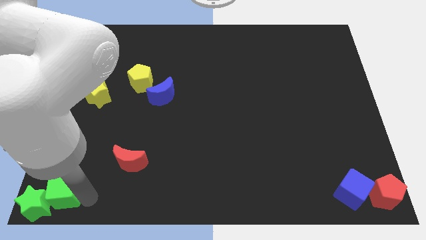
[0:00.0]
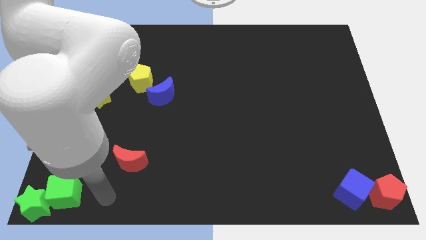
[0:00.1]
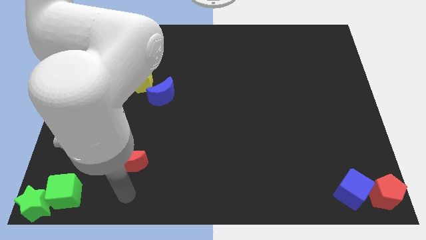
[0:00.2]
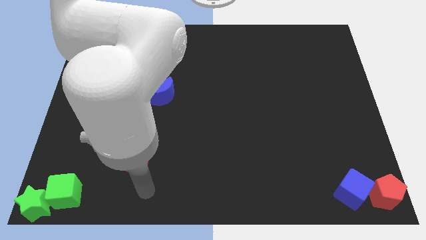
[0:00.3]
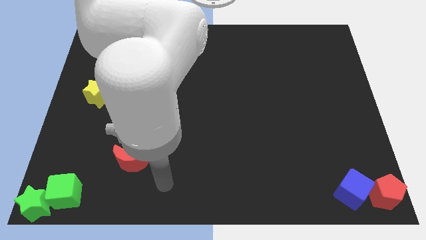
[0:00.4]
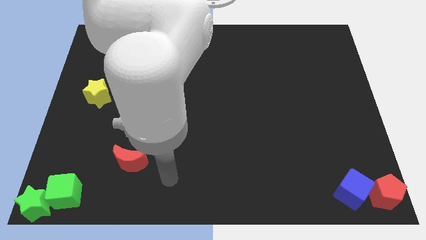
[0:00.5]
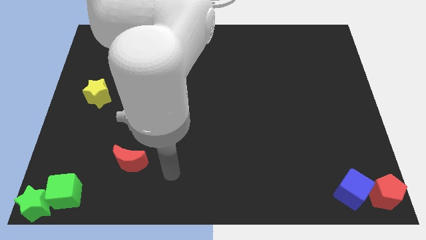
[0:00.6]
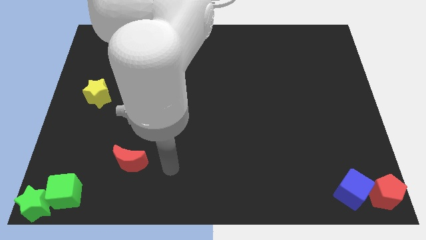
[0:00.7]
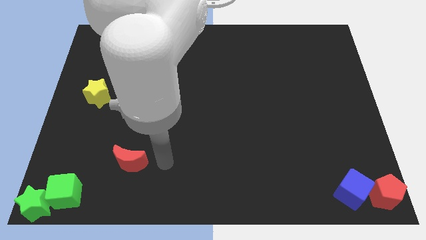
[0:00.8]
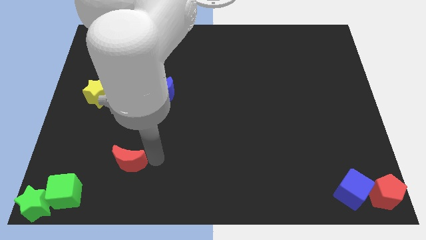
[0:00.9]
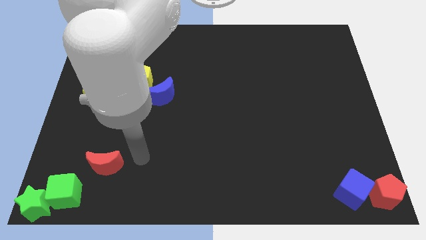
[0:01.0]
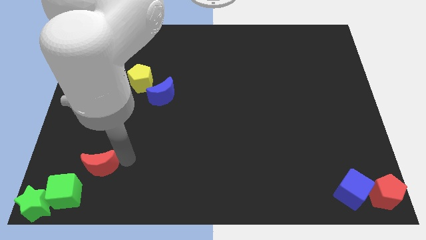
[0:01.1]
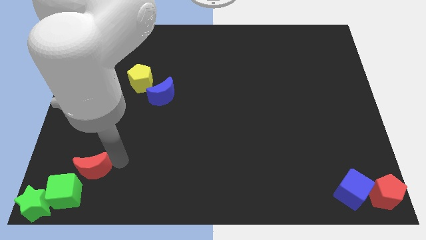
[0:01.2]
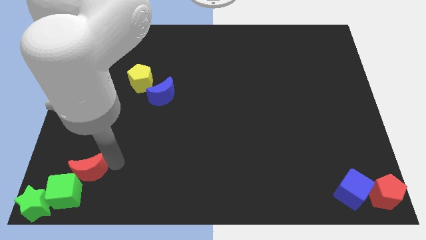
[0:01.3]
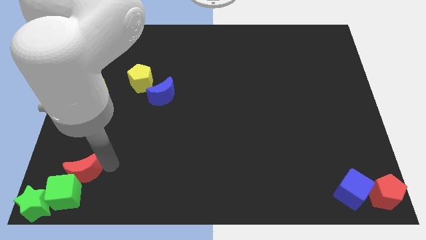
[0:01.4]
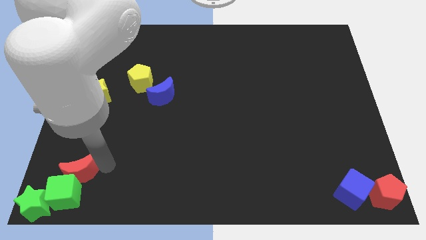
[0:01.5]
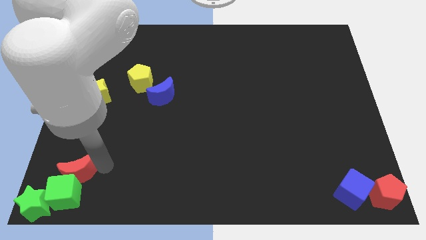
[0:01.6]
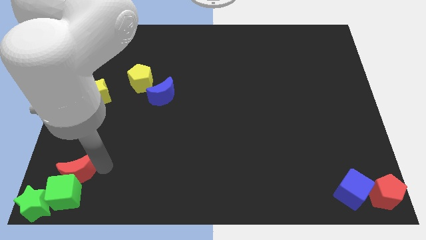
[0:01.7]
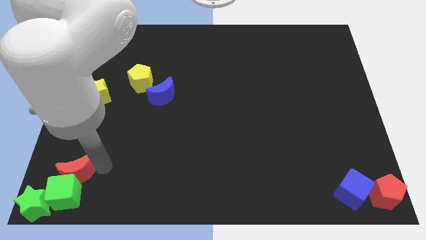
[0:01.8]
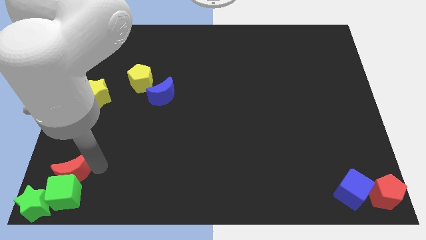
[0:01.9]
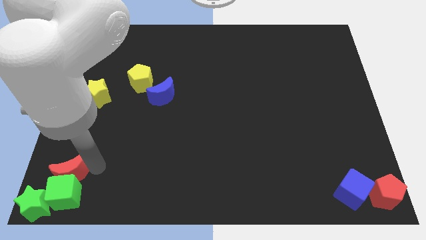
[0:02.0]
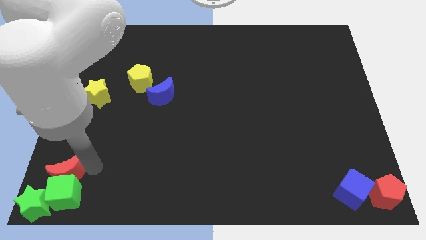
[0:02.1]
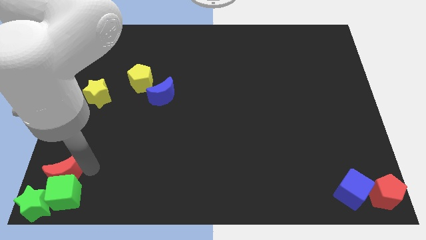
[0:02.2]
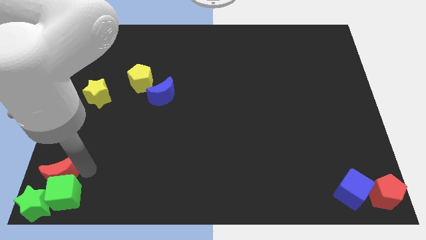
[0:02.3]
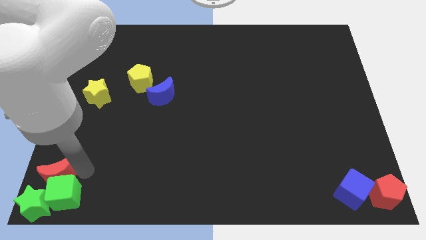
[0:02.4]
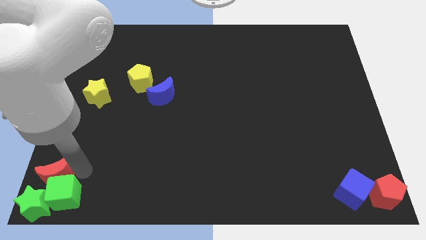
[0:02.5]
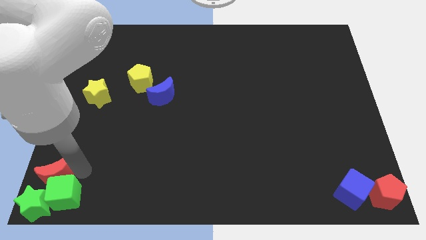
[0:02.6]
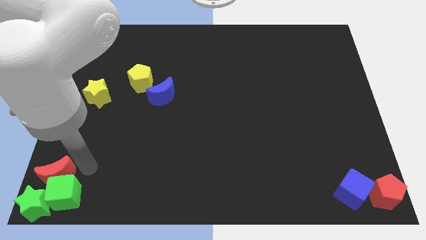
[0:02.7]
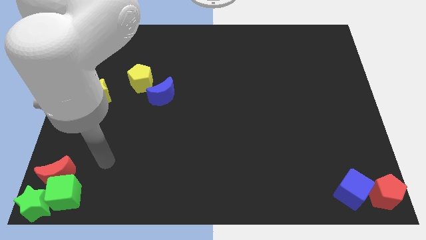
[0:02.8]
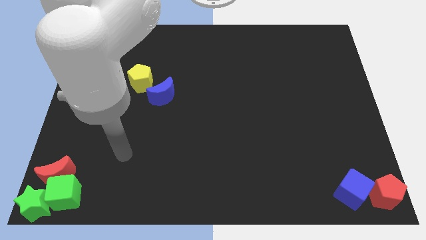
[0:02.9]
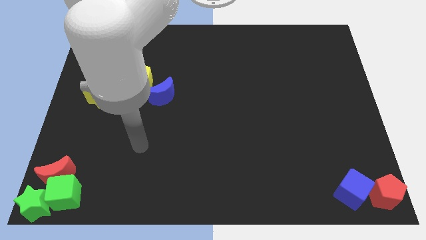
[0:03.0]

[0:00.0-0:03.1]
bring the red moon at the top side of the green cube

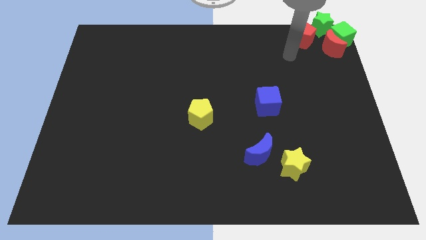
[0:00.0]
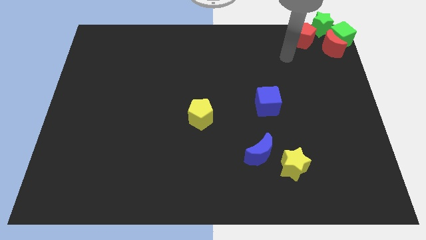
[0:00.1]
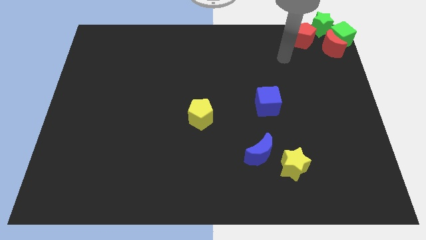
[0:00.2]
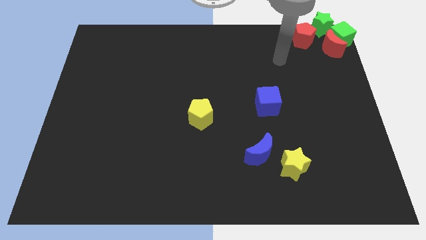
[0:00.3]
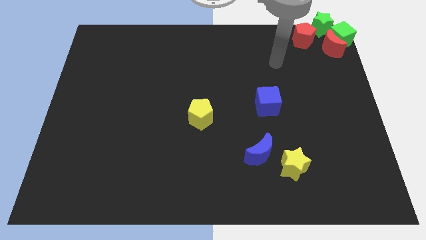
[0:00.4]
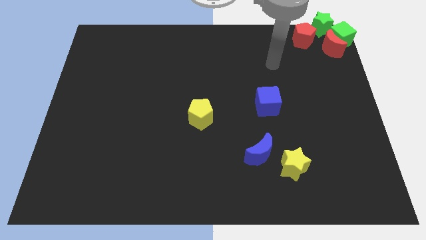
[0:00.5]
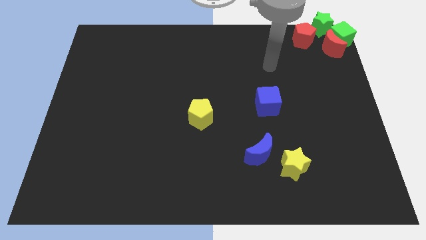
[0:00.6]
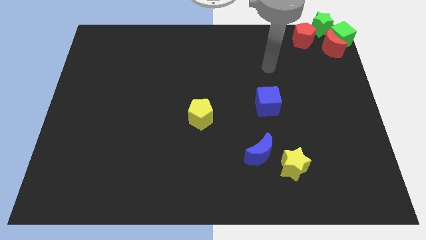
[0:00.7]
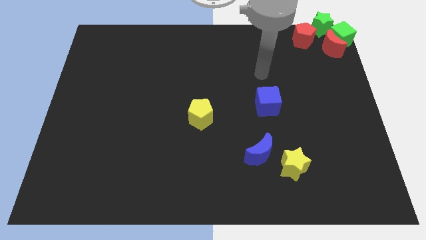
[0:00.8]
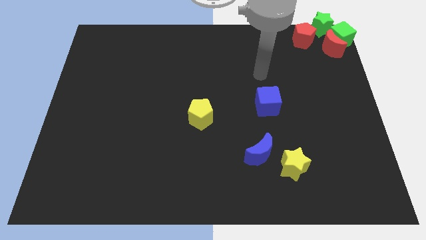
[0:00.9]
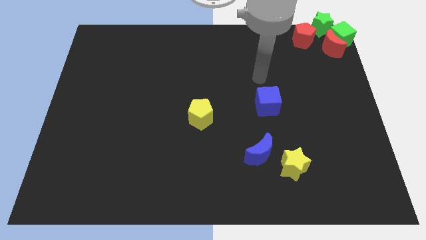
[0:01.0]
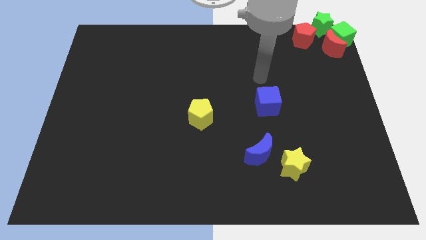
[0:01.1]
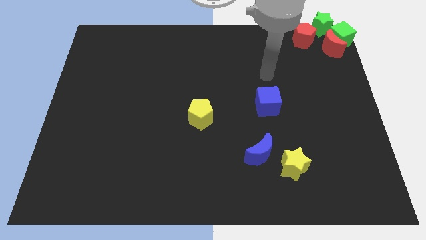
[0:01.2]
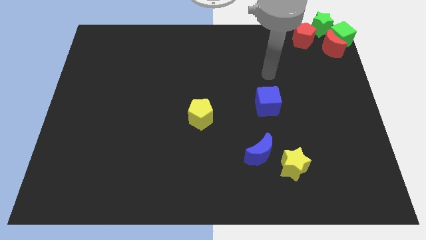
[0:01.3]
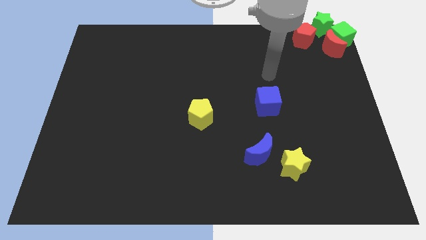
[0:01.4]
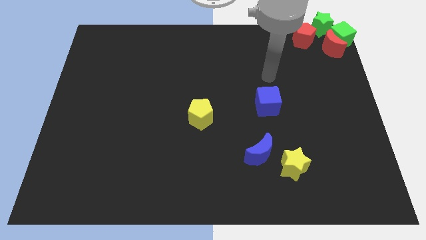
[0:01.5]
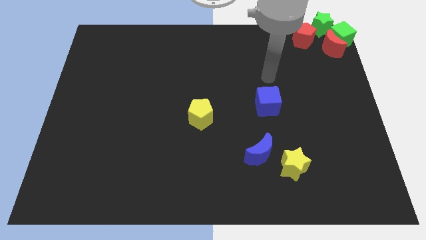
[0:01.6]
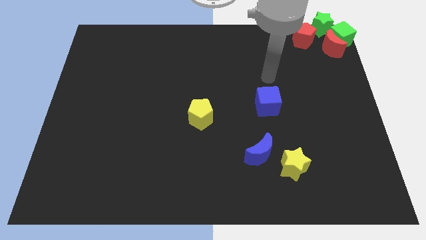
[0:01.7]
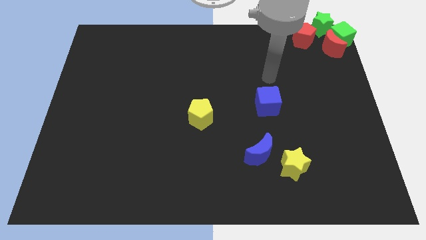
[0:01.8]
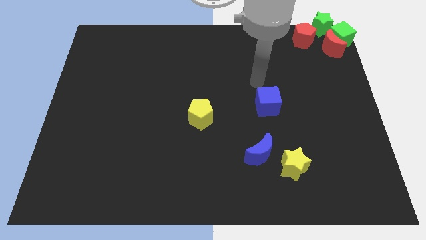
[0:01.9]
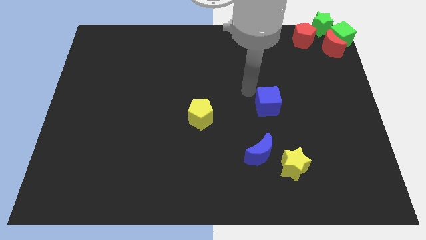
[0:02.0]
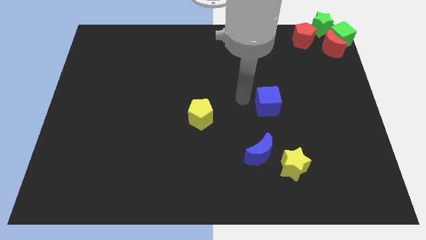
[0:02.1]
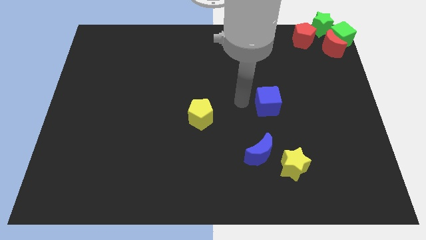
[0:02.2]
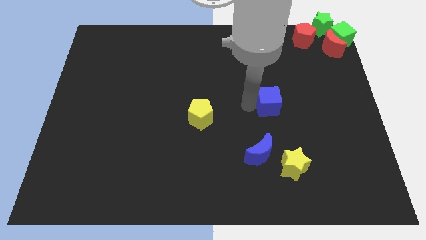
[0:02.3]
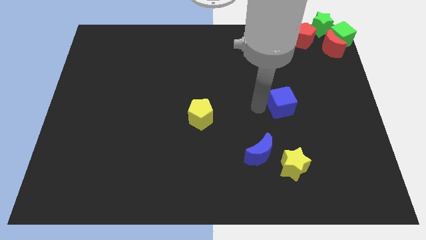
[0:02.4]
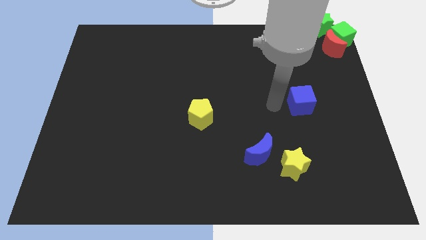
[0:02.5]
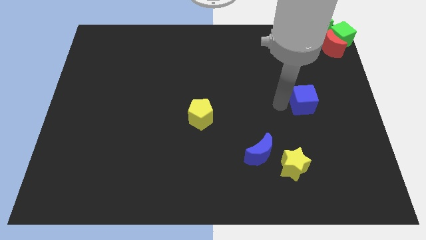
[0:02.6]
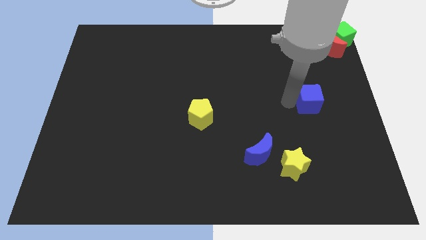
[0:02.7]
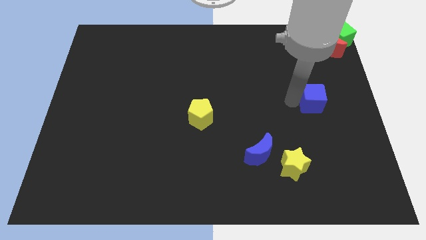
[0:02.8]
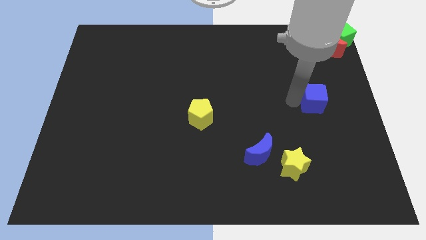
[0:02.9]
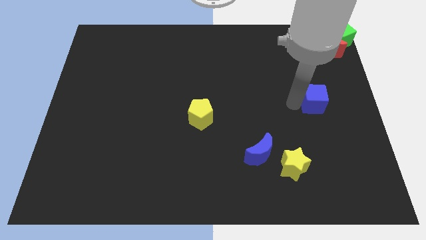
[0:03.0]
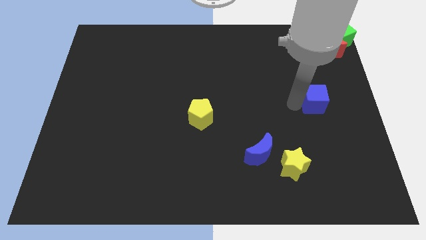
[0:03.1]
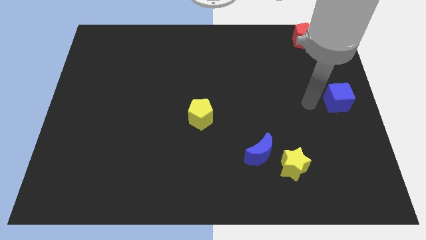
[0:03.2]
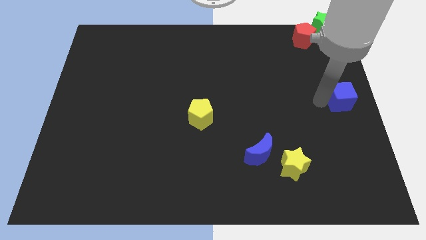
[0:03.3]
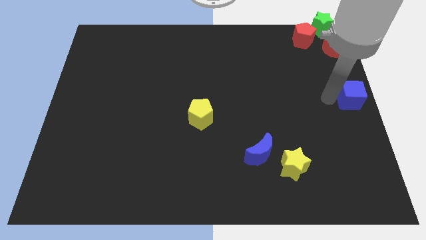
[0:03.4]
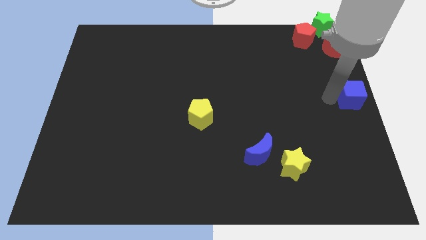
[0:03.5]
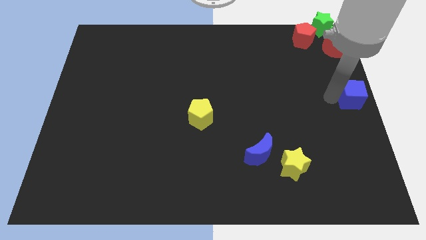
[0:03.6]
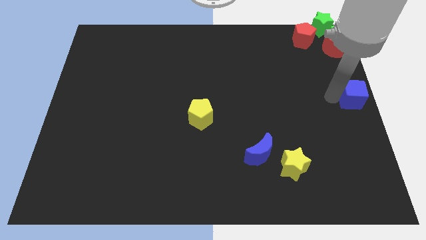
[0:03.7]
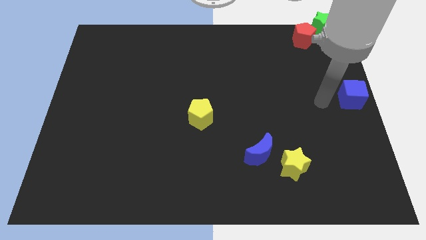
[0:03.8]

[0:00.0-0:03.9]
place the blue cube at the right center of the table

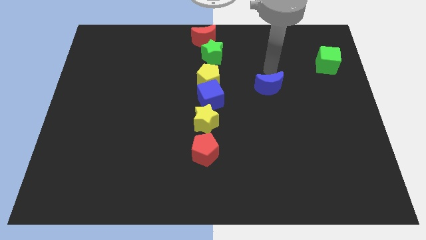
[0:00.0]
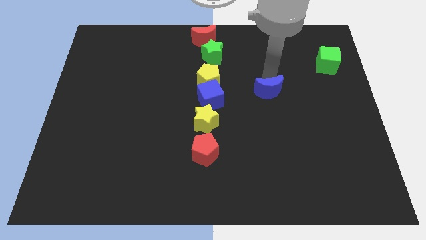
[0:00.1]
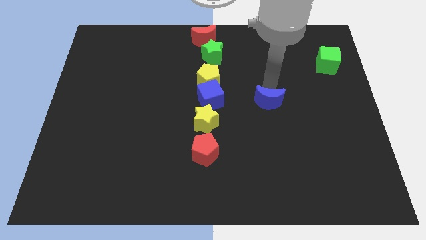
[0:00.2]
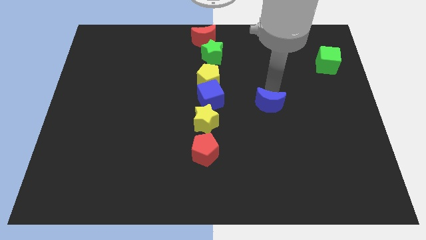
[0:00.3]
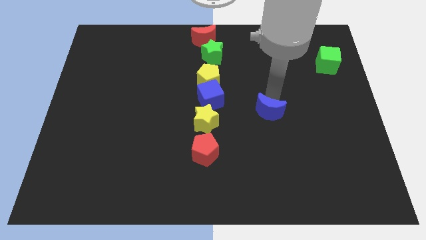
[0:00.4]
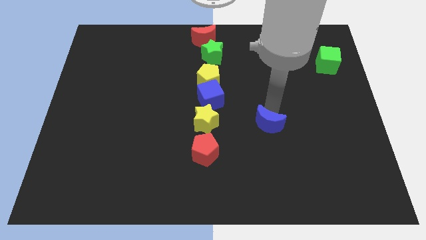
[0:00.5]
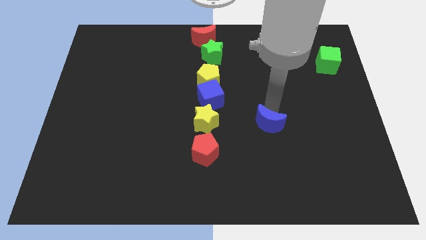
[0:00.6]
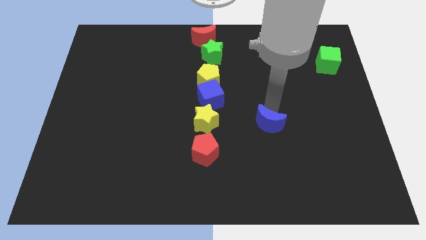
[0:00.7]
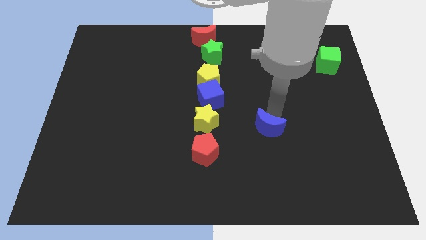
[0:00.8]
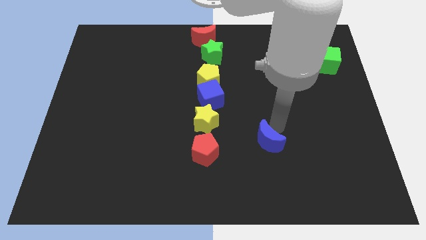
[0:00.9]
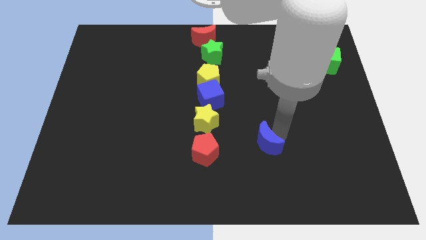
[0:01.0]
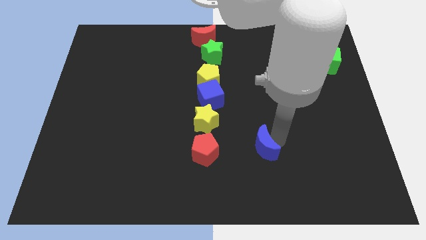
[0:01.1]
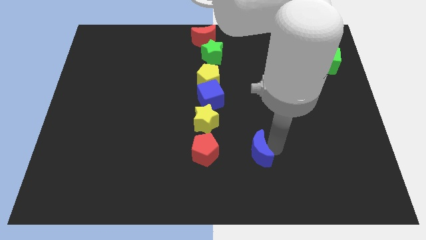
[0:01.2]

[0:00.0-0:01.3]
push the blue moon towards the bottom side of the board

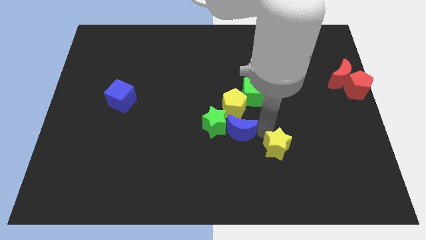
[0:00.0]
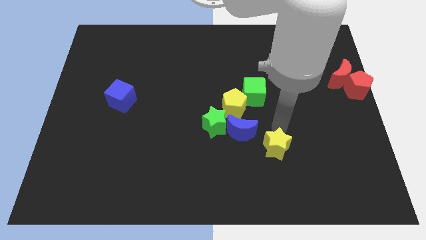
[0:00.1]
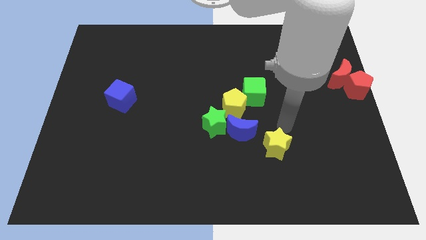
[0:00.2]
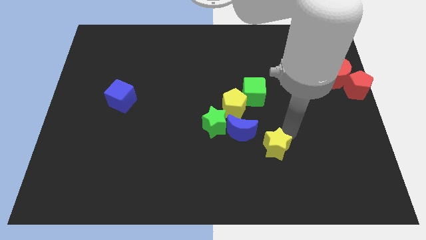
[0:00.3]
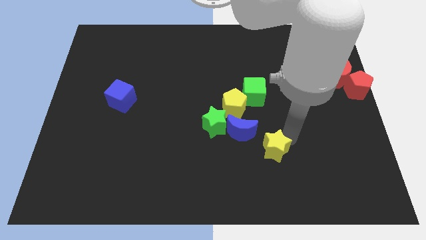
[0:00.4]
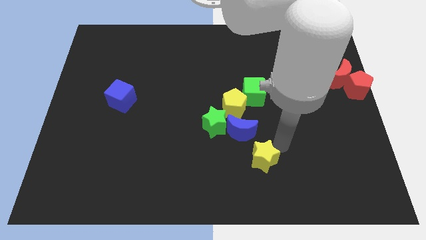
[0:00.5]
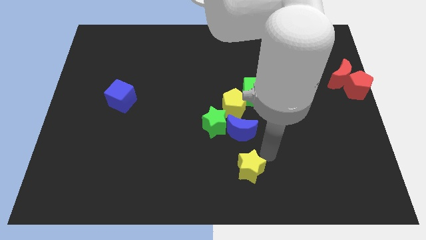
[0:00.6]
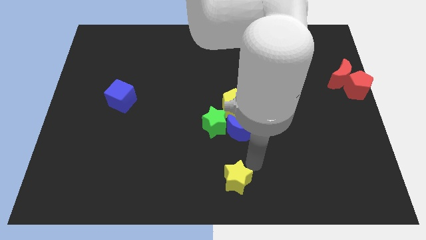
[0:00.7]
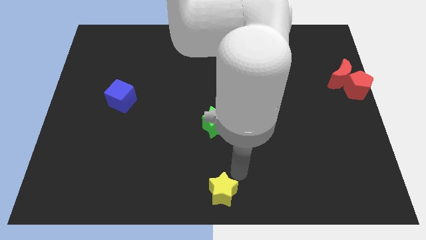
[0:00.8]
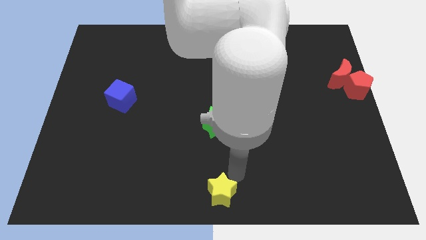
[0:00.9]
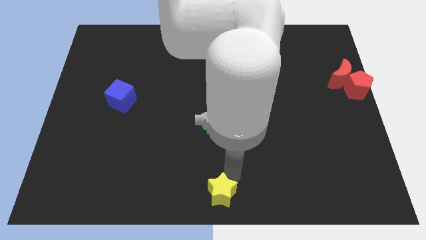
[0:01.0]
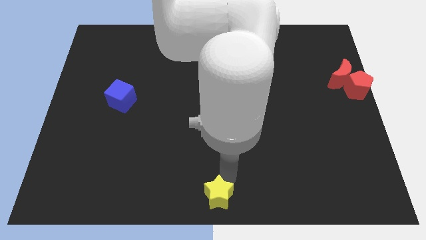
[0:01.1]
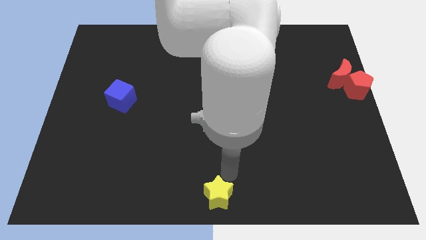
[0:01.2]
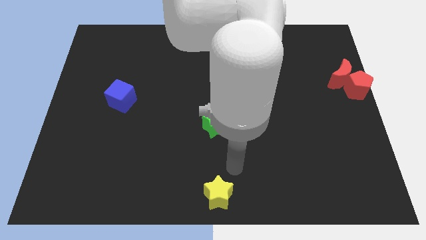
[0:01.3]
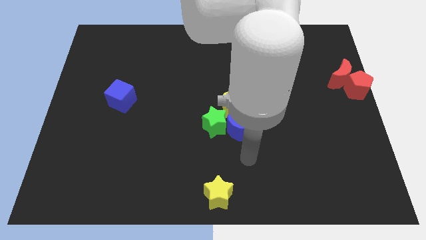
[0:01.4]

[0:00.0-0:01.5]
push the yellow star to the bottom center of the boatrd
